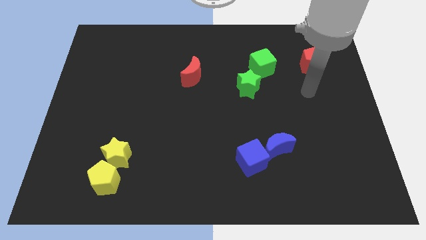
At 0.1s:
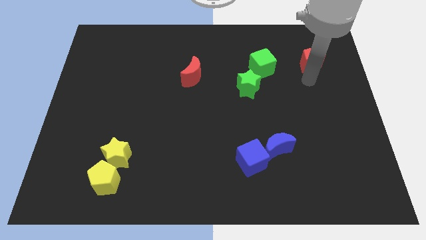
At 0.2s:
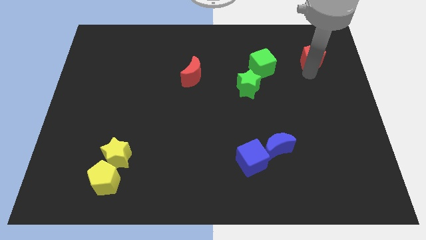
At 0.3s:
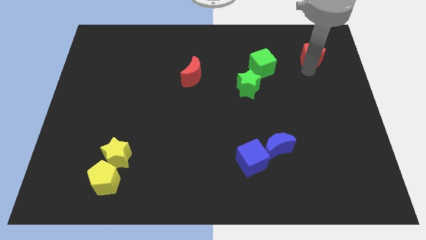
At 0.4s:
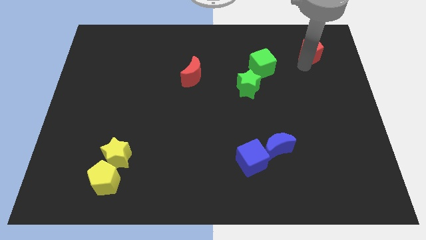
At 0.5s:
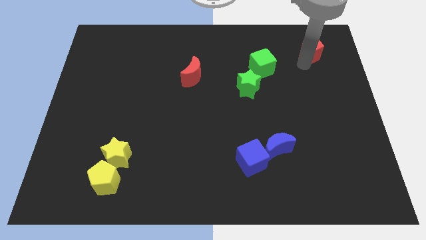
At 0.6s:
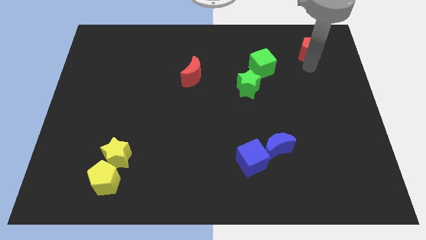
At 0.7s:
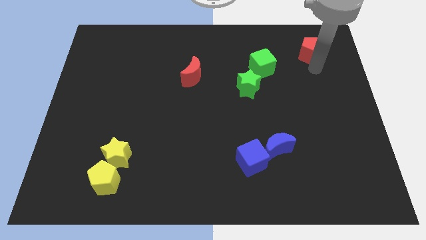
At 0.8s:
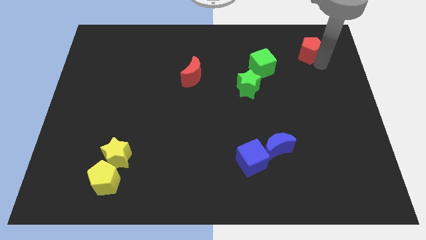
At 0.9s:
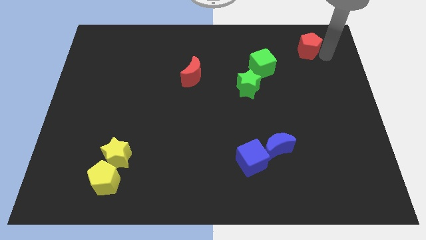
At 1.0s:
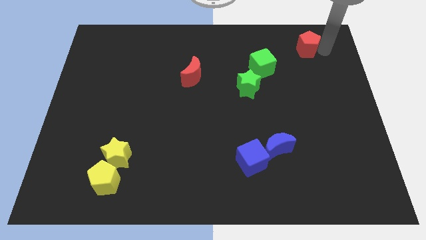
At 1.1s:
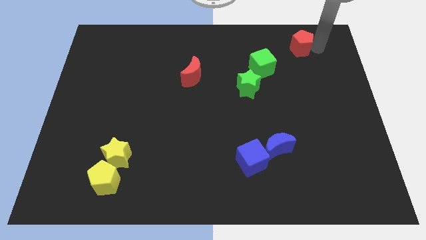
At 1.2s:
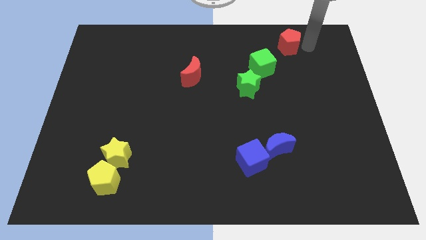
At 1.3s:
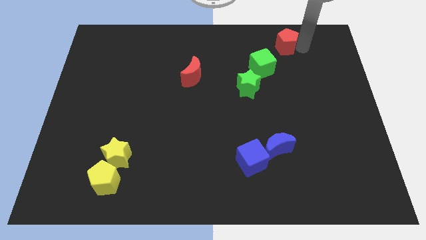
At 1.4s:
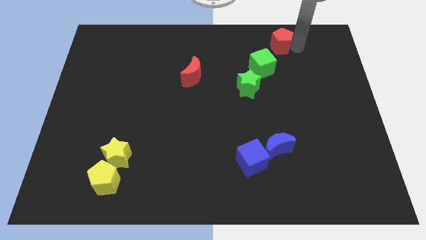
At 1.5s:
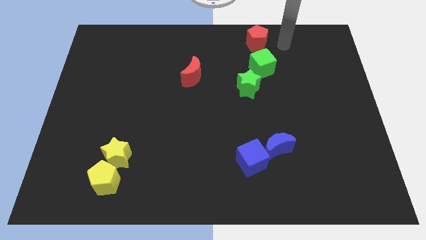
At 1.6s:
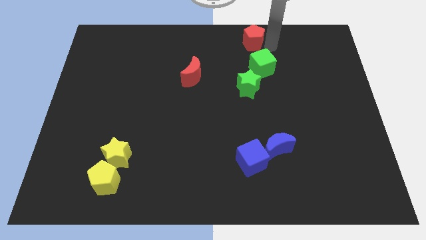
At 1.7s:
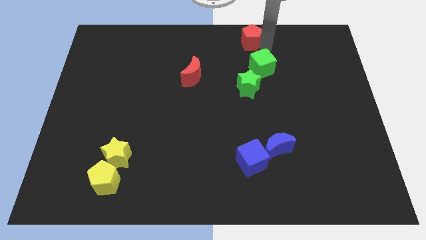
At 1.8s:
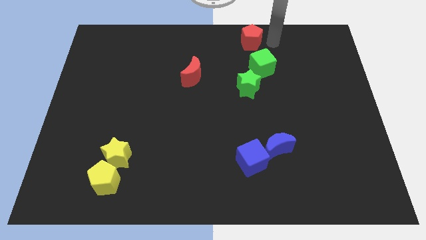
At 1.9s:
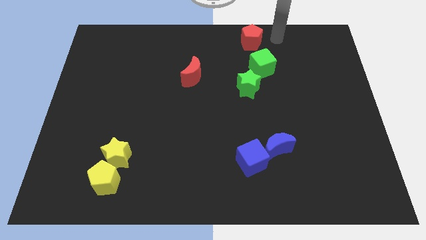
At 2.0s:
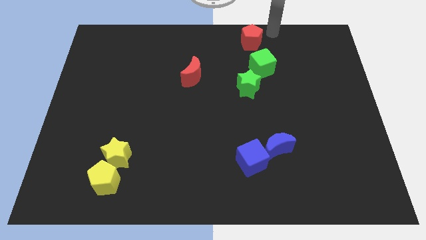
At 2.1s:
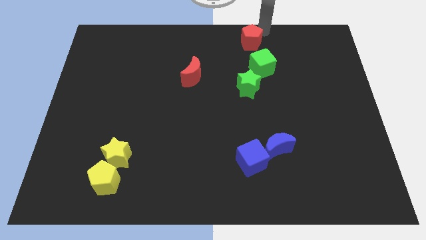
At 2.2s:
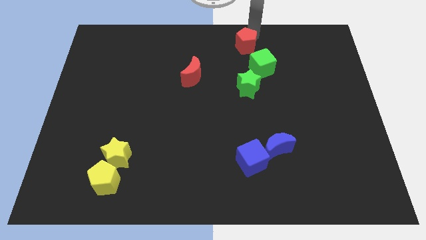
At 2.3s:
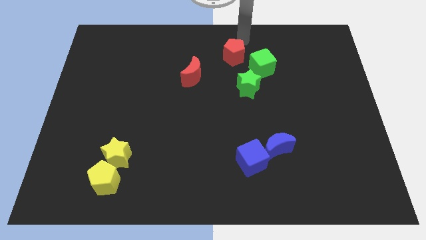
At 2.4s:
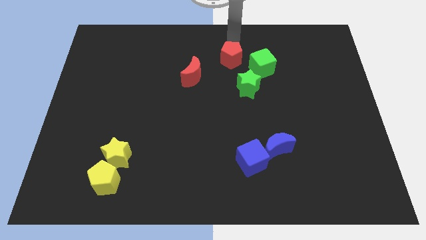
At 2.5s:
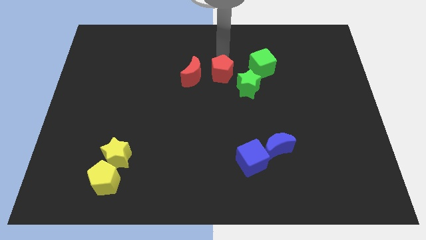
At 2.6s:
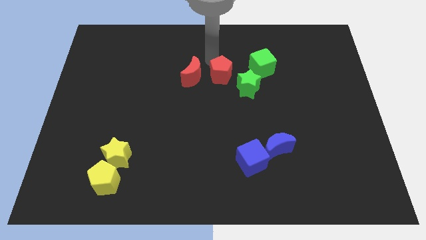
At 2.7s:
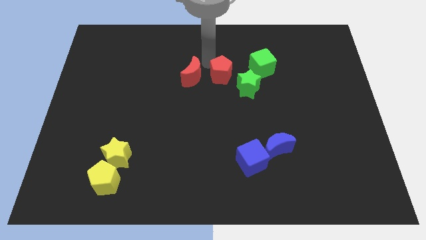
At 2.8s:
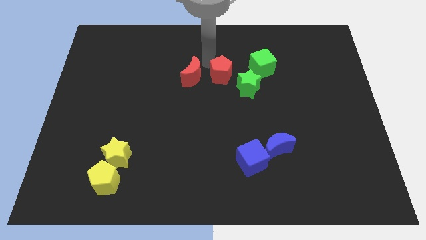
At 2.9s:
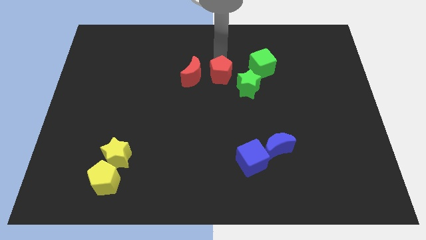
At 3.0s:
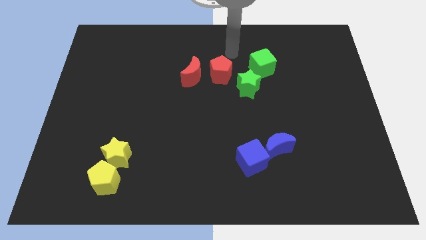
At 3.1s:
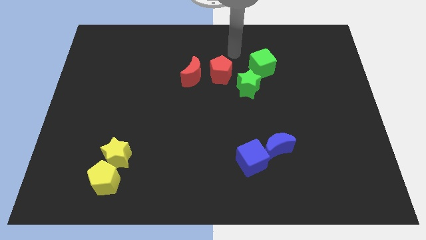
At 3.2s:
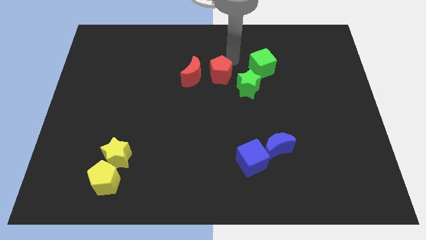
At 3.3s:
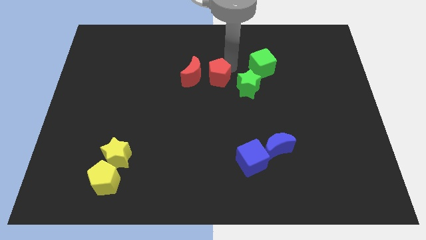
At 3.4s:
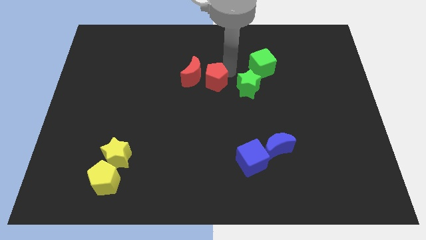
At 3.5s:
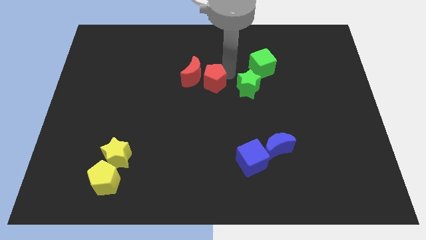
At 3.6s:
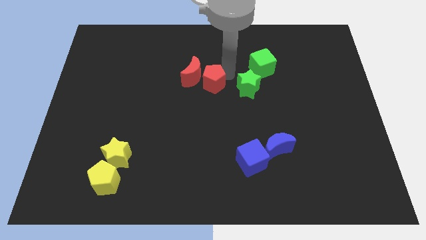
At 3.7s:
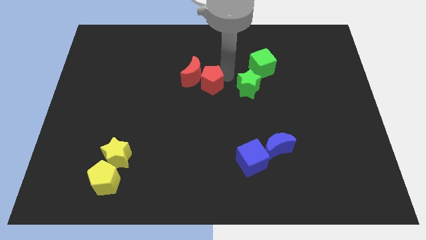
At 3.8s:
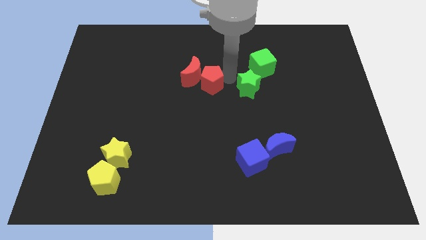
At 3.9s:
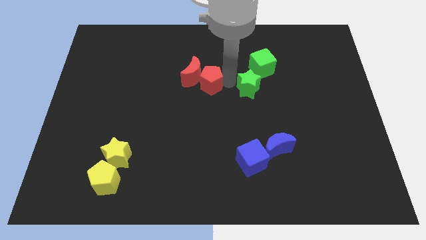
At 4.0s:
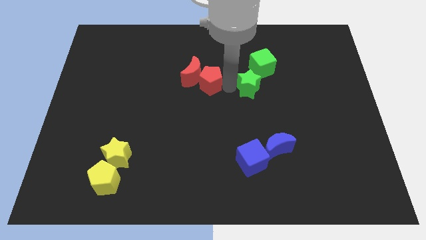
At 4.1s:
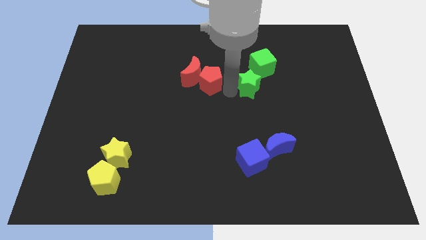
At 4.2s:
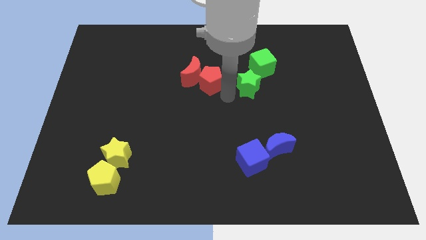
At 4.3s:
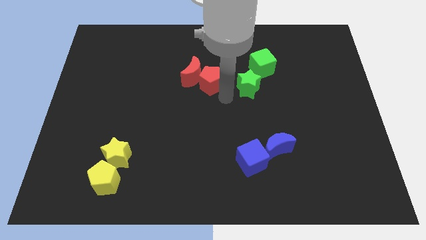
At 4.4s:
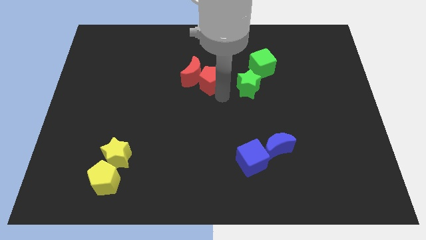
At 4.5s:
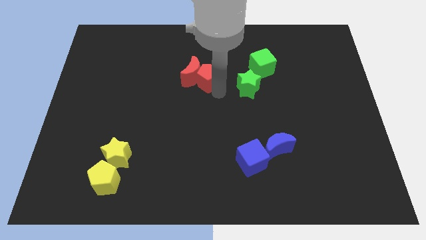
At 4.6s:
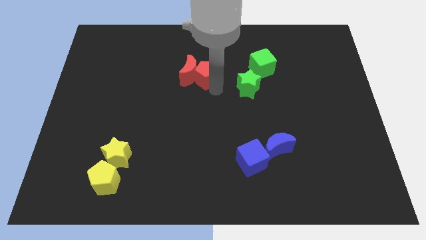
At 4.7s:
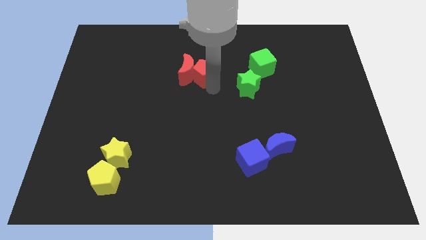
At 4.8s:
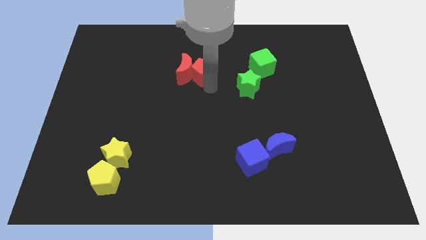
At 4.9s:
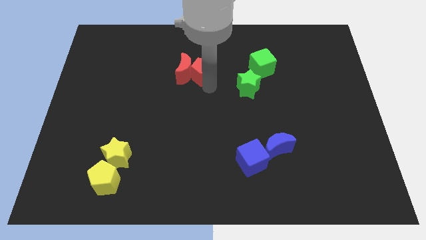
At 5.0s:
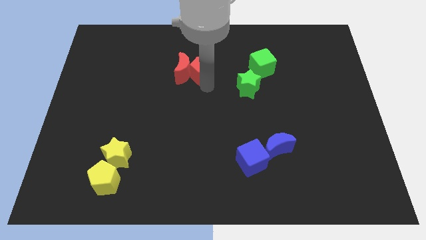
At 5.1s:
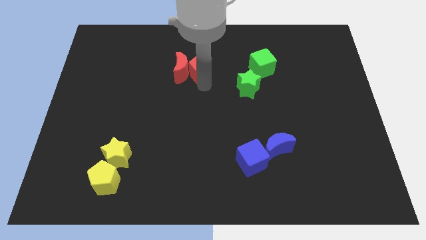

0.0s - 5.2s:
move the red pentagon to touch the red crescent

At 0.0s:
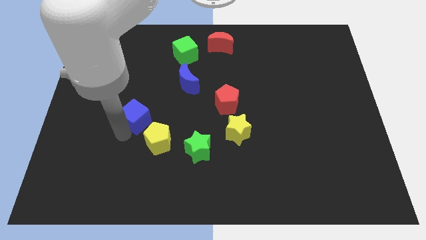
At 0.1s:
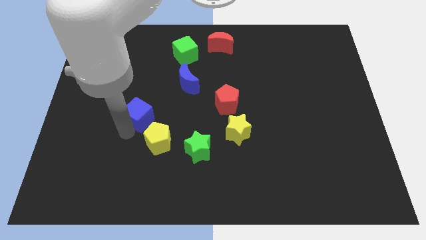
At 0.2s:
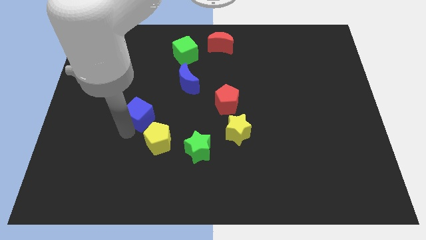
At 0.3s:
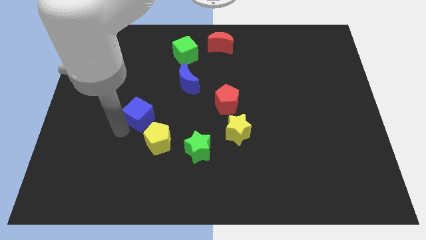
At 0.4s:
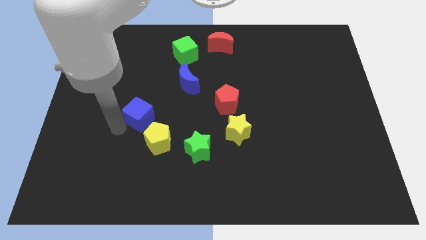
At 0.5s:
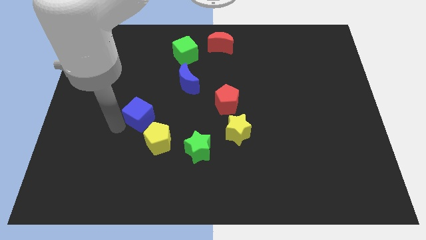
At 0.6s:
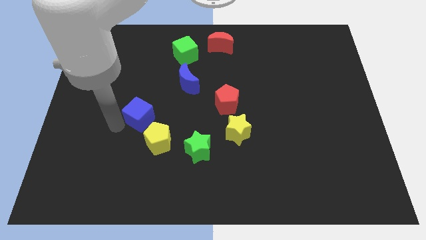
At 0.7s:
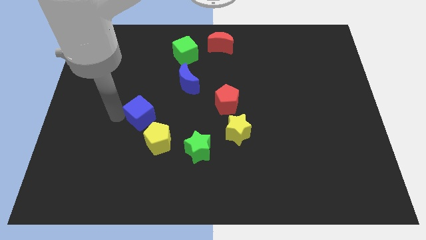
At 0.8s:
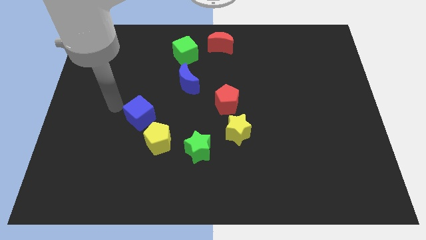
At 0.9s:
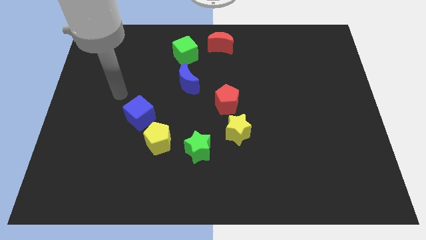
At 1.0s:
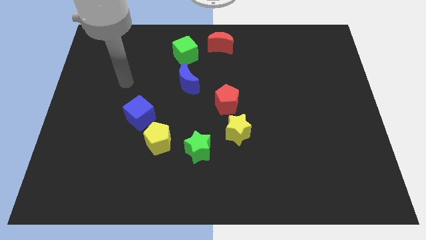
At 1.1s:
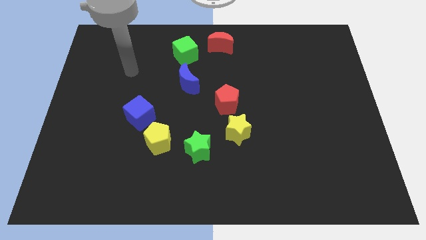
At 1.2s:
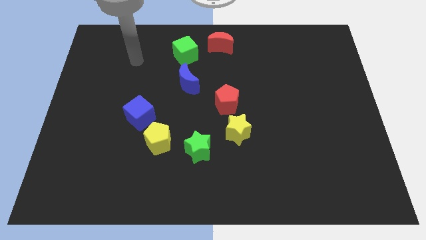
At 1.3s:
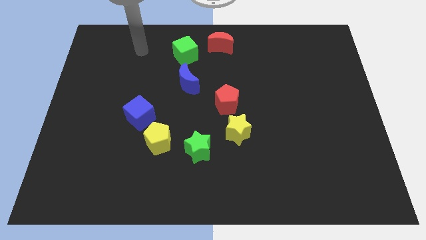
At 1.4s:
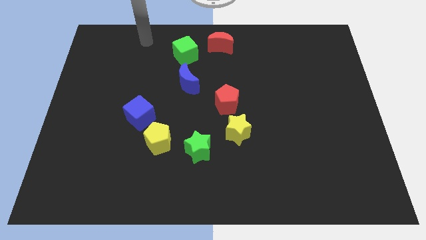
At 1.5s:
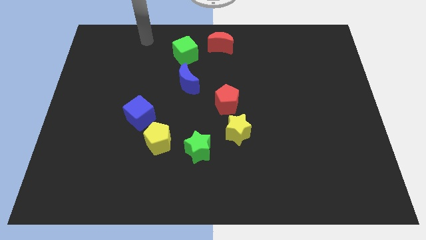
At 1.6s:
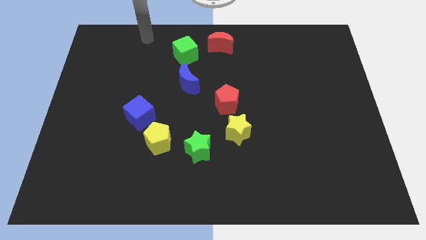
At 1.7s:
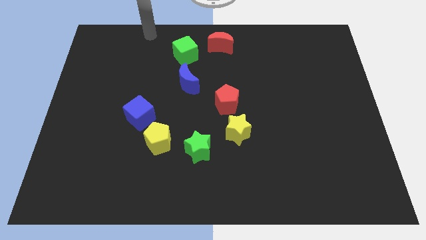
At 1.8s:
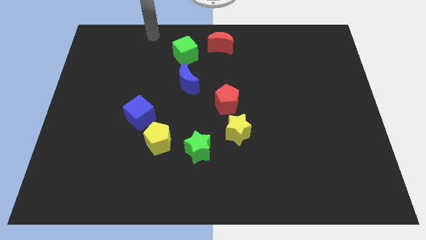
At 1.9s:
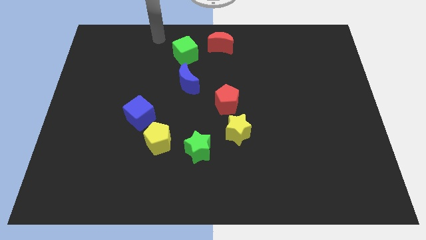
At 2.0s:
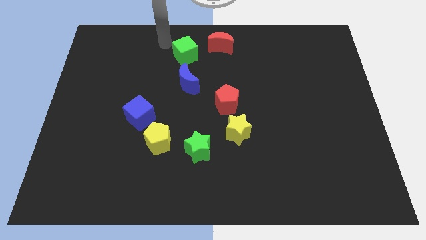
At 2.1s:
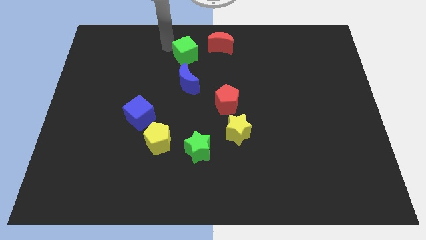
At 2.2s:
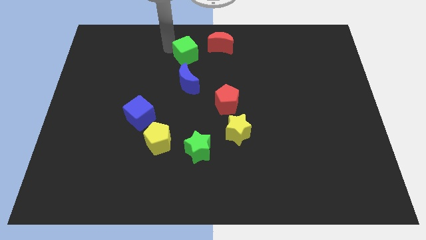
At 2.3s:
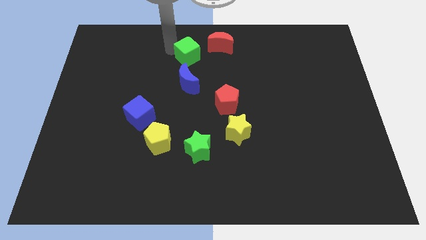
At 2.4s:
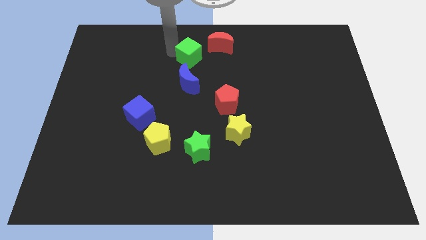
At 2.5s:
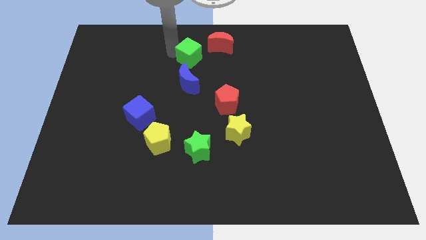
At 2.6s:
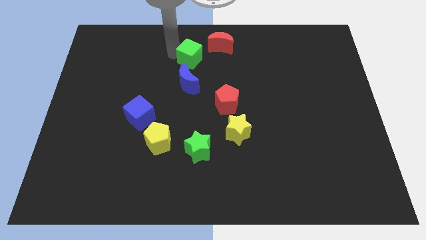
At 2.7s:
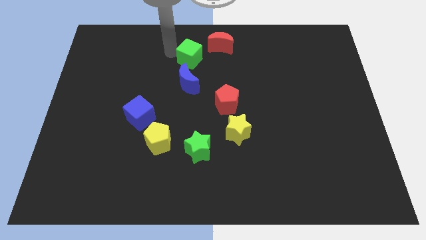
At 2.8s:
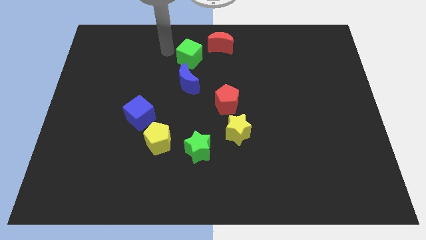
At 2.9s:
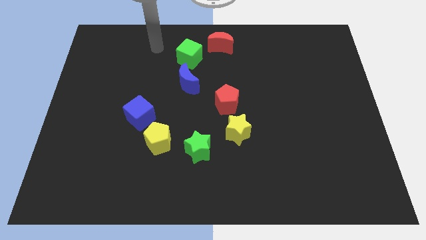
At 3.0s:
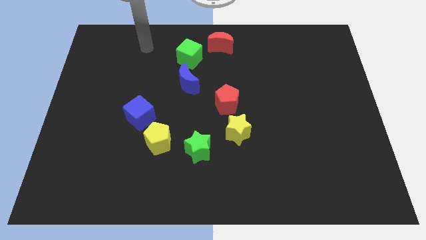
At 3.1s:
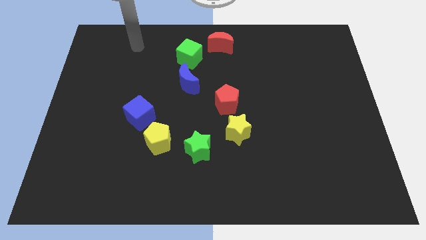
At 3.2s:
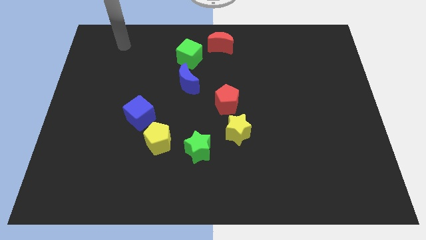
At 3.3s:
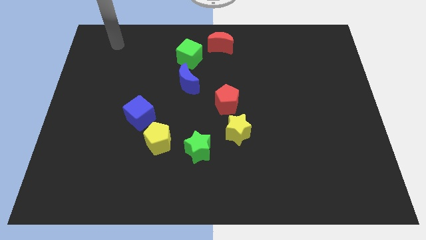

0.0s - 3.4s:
slightly push the green cube towards the blue crescent

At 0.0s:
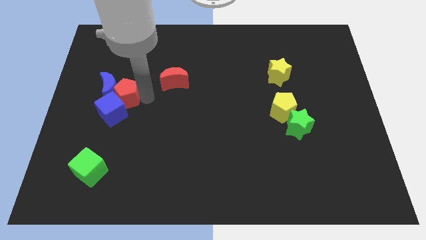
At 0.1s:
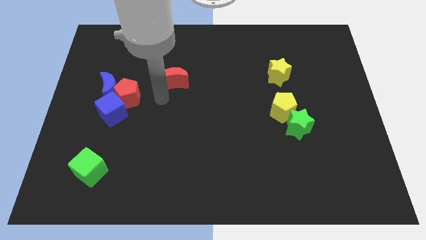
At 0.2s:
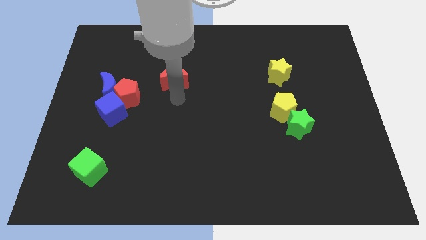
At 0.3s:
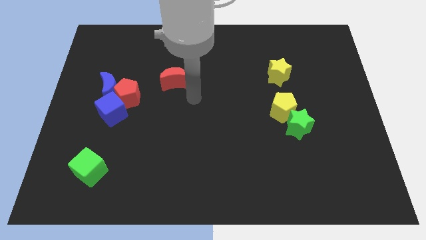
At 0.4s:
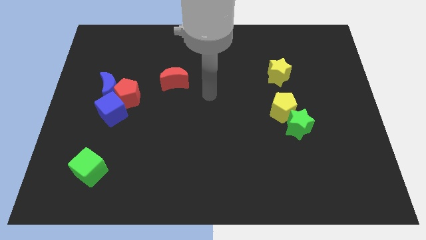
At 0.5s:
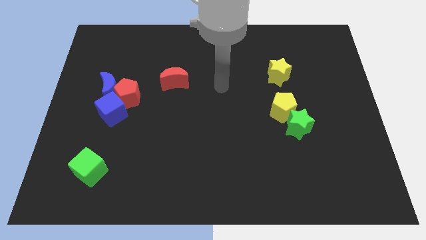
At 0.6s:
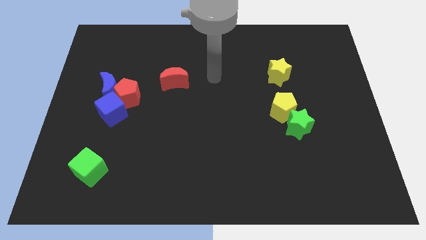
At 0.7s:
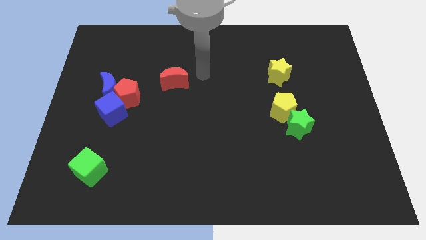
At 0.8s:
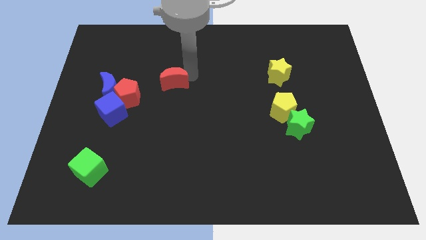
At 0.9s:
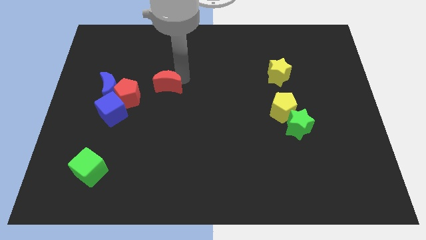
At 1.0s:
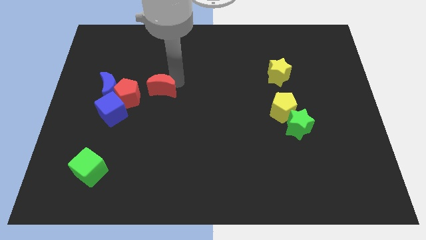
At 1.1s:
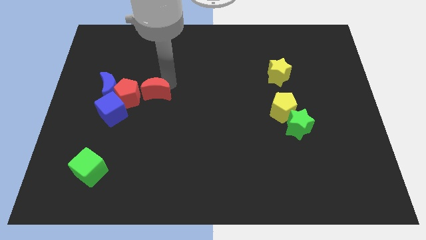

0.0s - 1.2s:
place the red moon to the right of red pentagon
